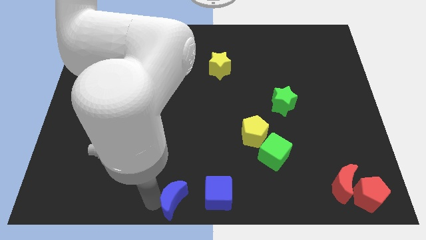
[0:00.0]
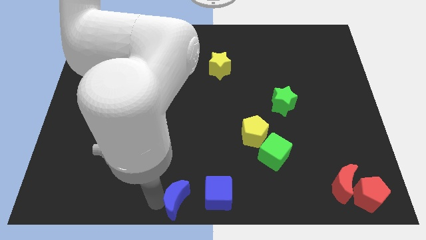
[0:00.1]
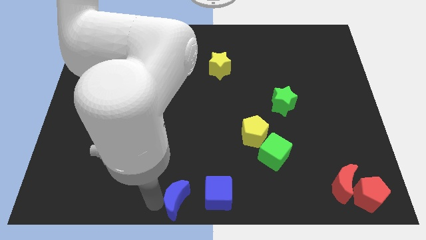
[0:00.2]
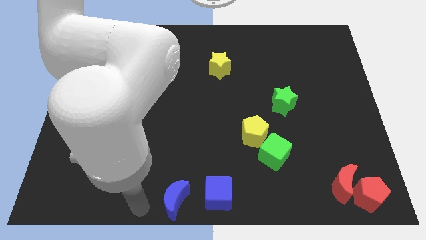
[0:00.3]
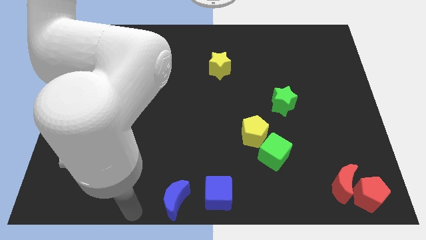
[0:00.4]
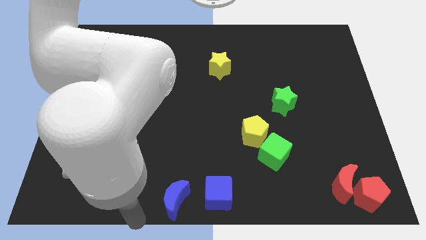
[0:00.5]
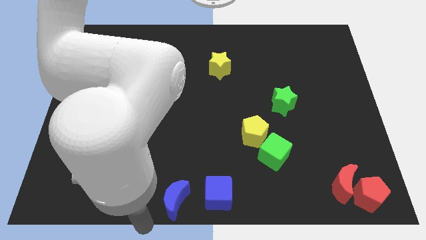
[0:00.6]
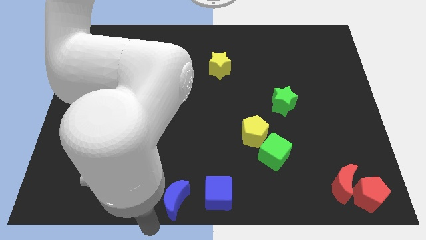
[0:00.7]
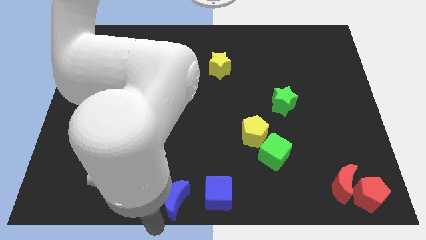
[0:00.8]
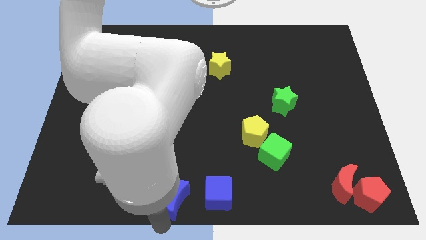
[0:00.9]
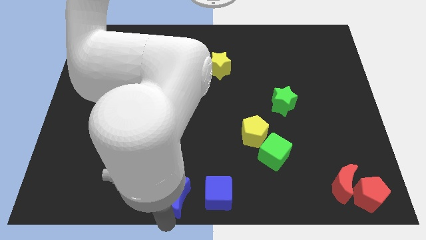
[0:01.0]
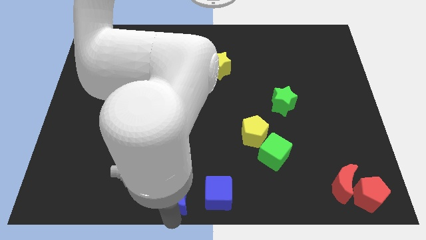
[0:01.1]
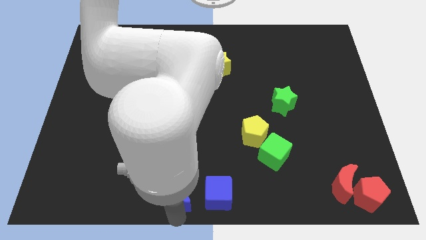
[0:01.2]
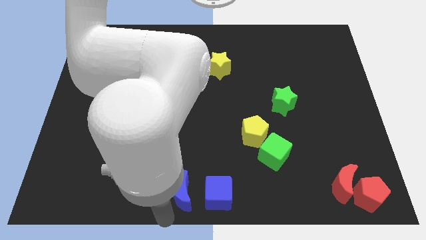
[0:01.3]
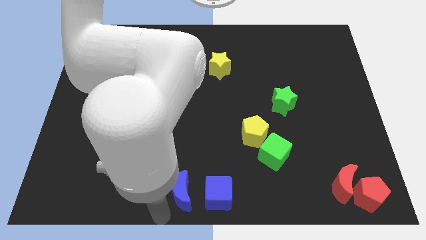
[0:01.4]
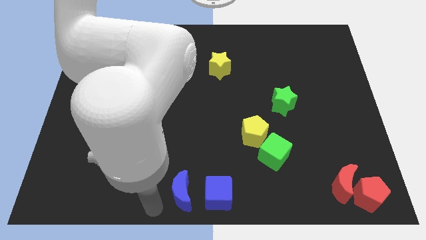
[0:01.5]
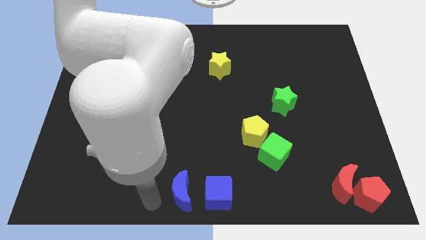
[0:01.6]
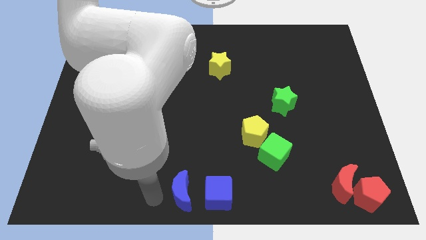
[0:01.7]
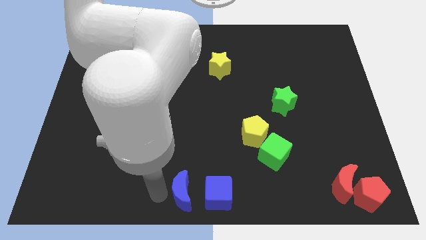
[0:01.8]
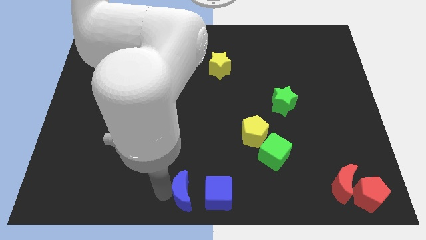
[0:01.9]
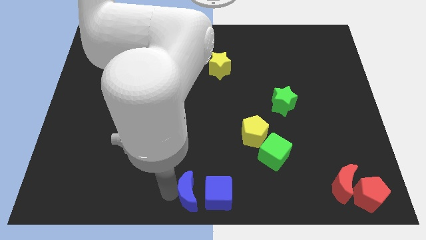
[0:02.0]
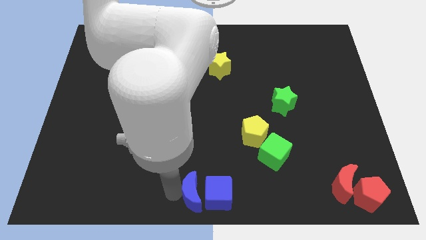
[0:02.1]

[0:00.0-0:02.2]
push blue moon into blue cube

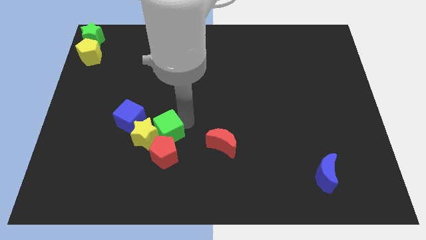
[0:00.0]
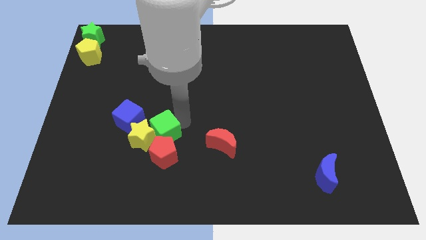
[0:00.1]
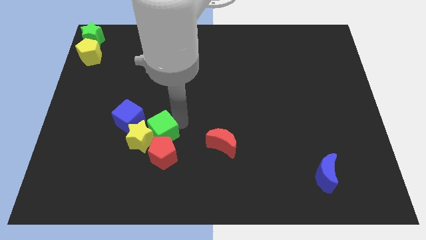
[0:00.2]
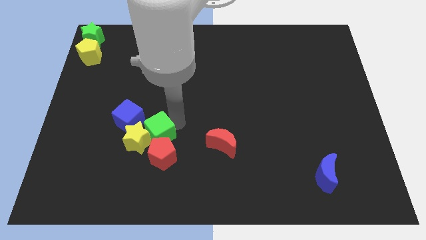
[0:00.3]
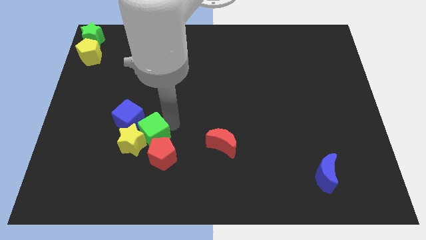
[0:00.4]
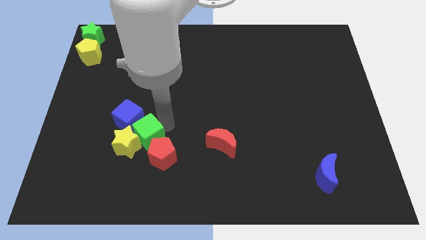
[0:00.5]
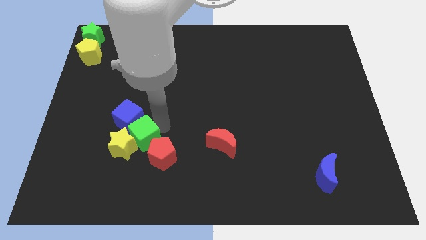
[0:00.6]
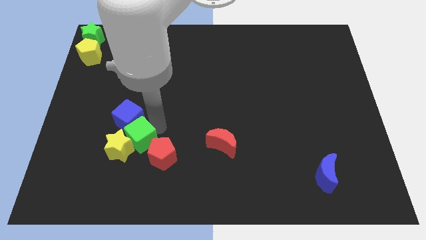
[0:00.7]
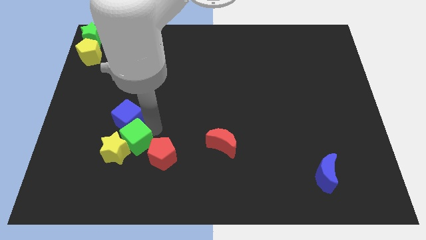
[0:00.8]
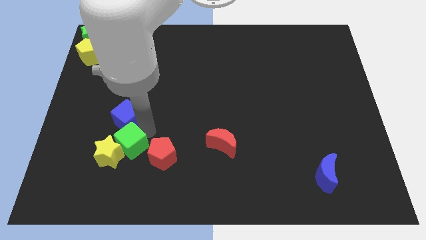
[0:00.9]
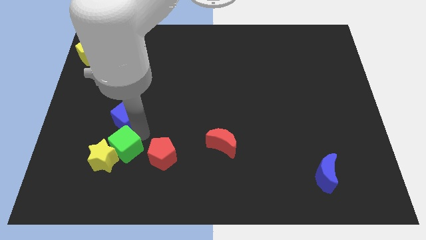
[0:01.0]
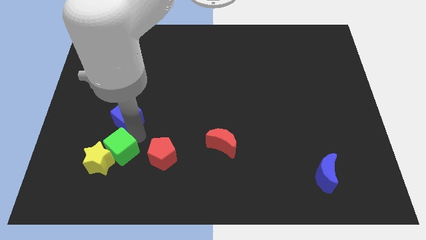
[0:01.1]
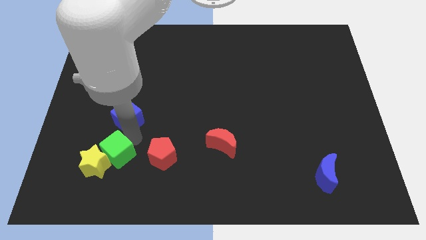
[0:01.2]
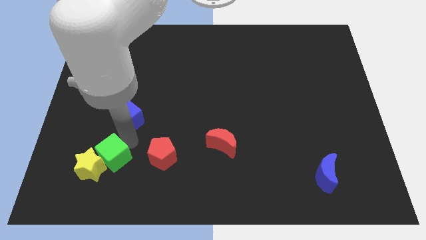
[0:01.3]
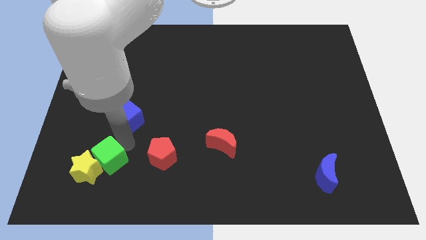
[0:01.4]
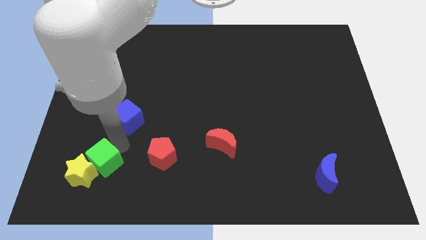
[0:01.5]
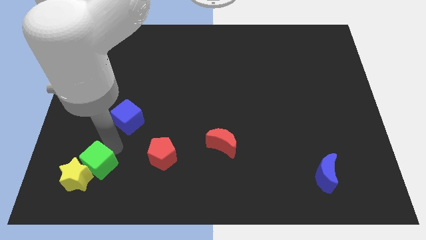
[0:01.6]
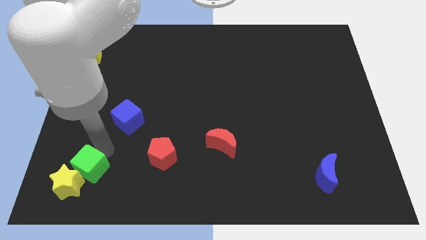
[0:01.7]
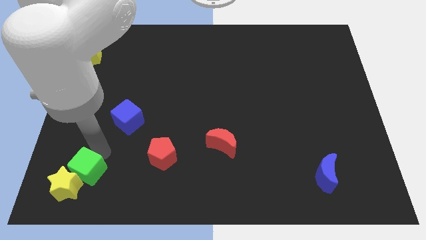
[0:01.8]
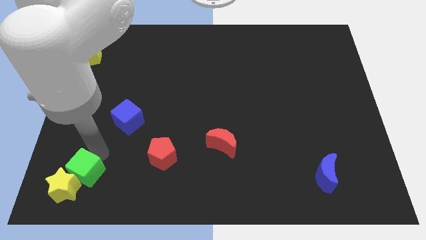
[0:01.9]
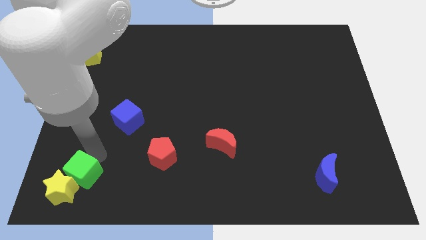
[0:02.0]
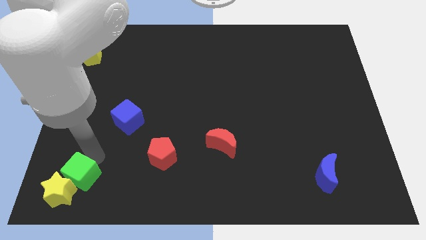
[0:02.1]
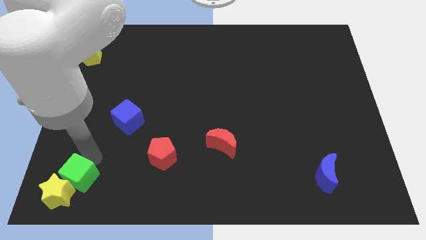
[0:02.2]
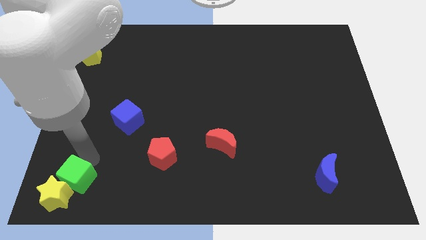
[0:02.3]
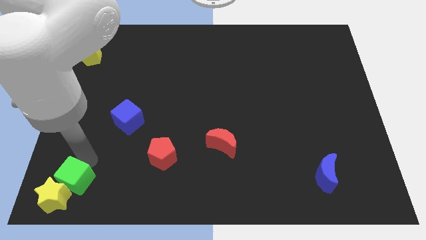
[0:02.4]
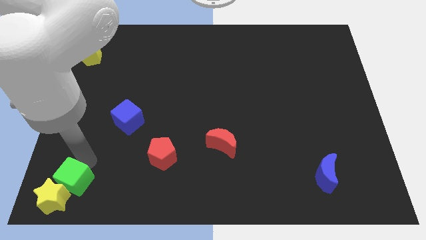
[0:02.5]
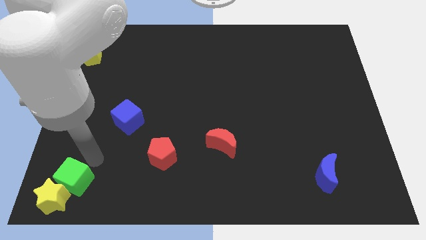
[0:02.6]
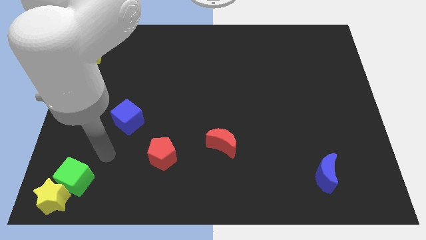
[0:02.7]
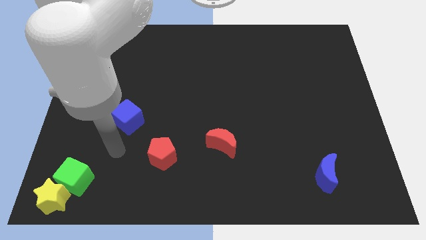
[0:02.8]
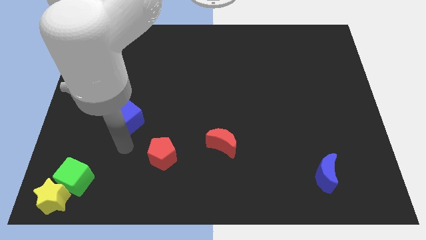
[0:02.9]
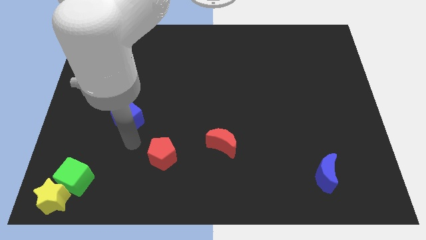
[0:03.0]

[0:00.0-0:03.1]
push green cube along with yellow star to the bottom left

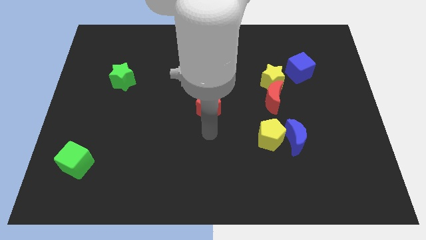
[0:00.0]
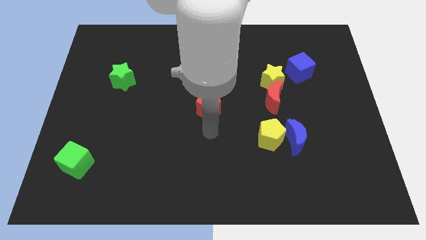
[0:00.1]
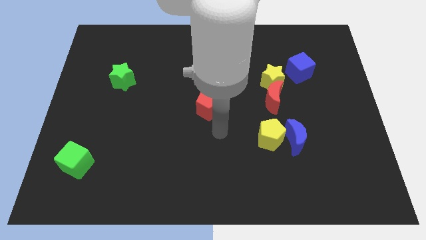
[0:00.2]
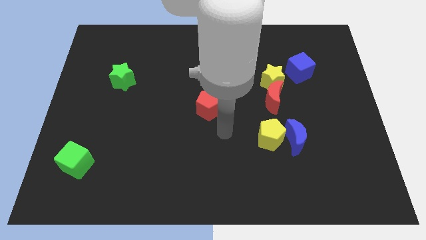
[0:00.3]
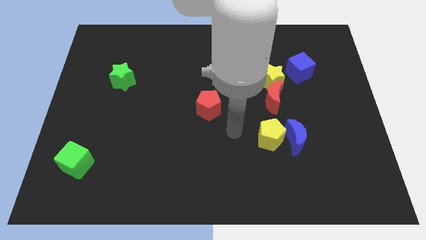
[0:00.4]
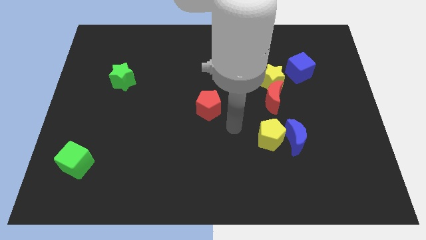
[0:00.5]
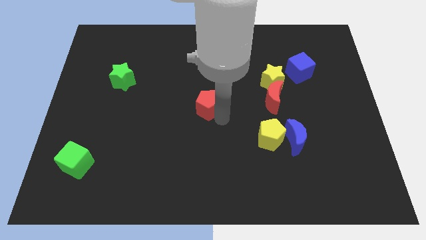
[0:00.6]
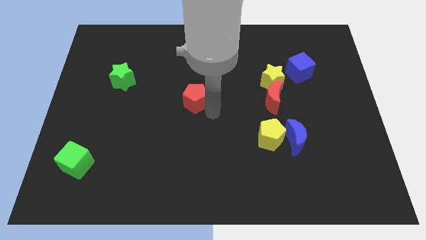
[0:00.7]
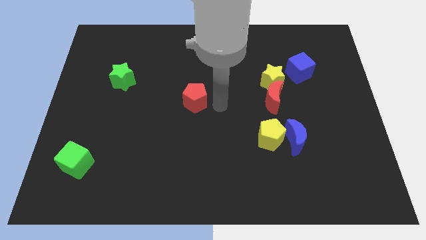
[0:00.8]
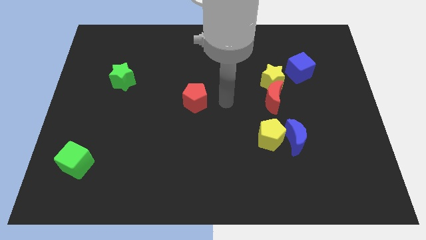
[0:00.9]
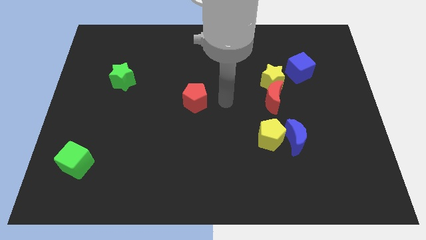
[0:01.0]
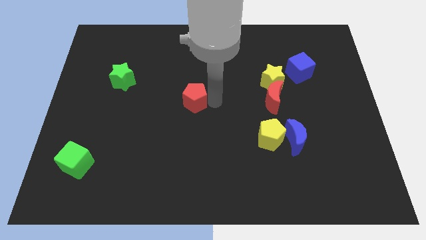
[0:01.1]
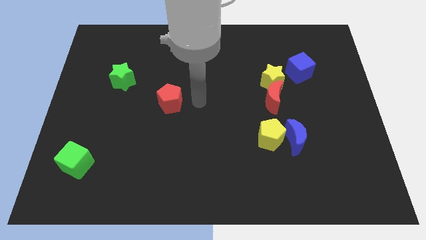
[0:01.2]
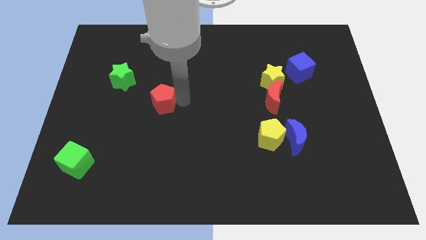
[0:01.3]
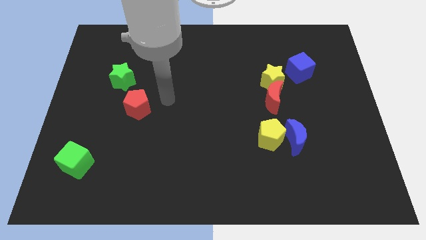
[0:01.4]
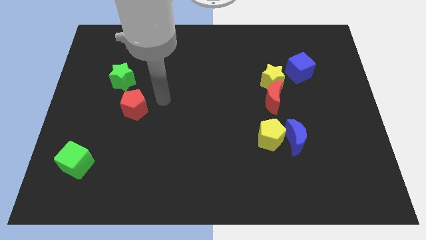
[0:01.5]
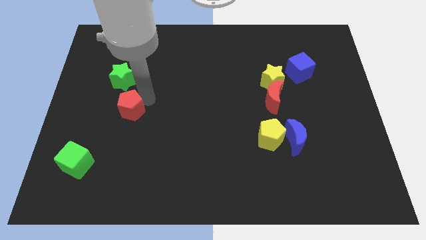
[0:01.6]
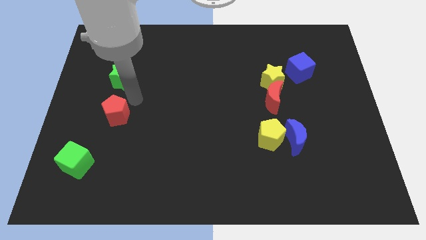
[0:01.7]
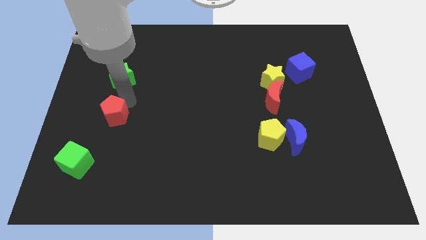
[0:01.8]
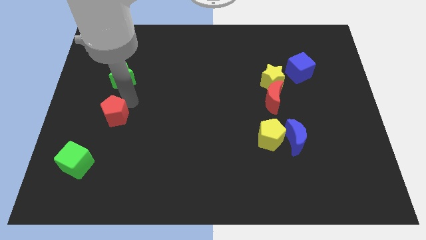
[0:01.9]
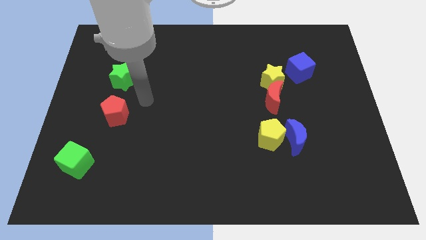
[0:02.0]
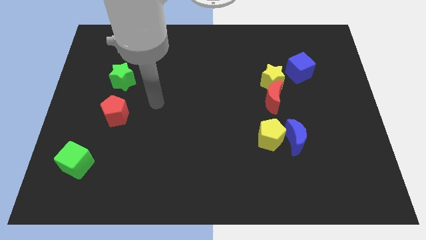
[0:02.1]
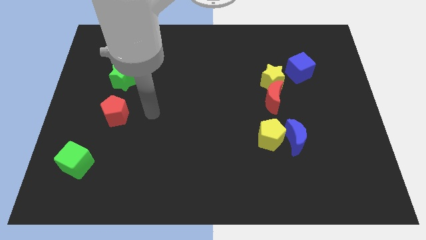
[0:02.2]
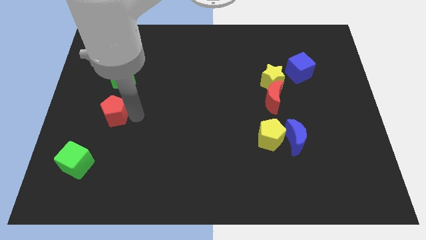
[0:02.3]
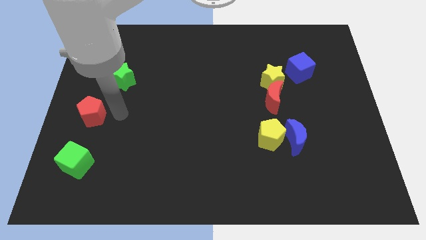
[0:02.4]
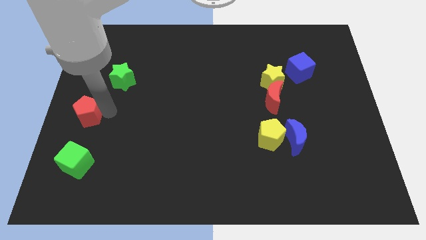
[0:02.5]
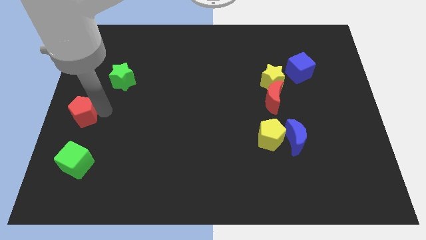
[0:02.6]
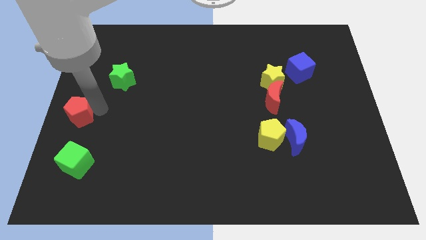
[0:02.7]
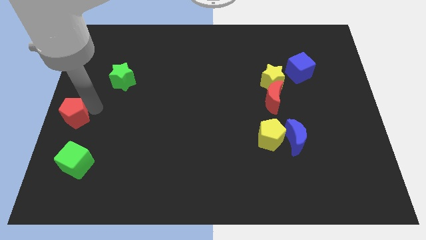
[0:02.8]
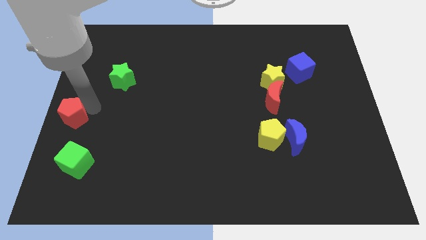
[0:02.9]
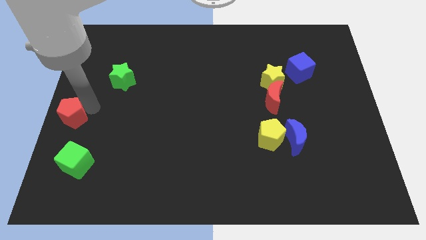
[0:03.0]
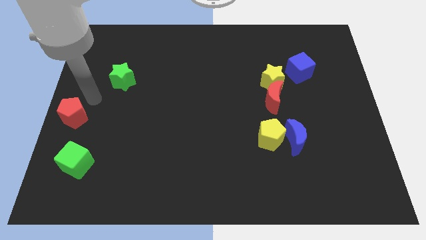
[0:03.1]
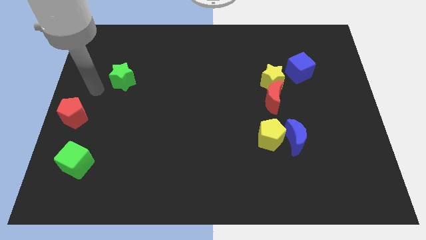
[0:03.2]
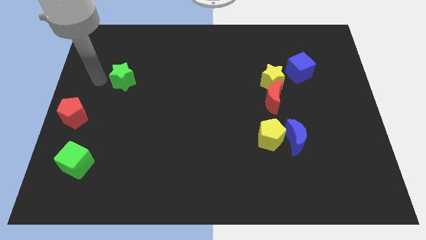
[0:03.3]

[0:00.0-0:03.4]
push the red pentagon to the left side of the board

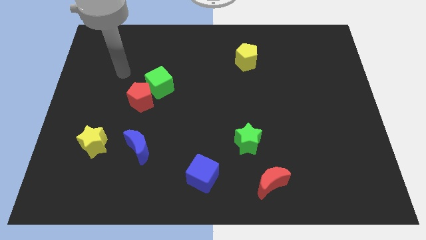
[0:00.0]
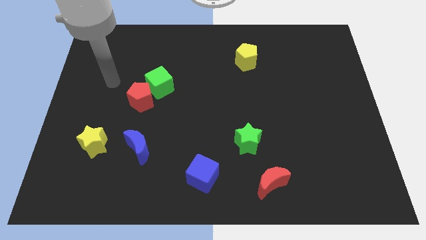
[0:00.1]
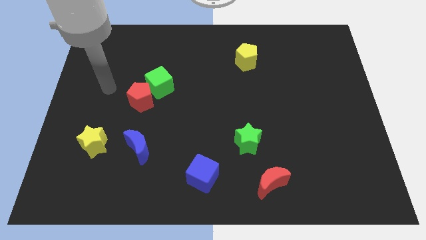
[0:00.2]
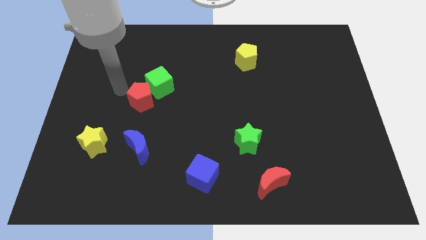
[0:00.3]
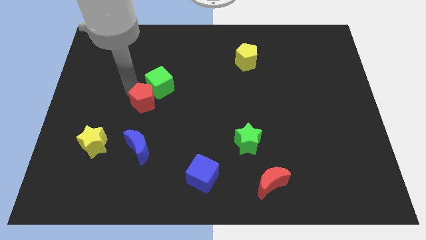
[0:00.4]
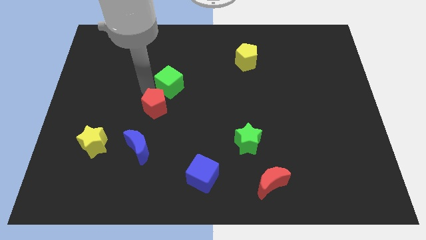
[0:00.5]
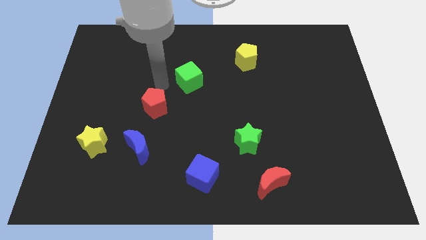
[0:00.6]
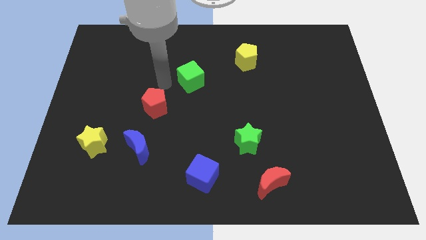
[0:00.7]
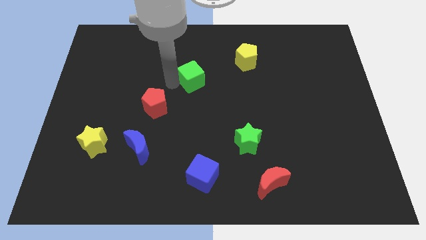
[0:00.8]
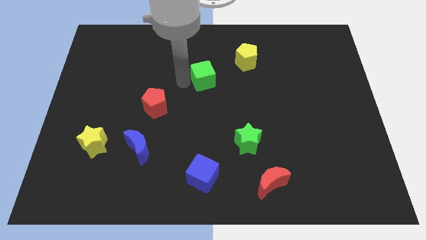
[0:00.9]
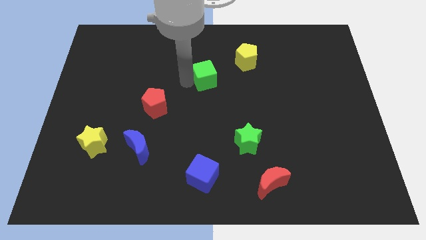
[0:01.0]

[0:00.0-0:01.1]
slightly move the green cube towards the top center
